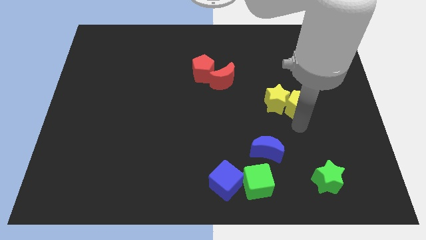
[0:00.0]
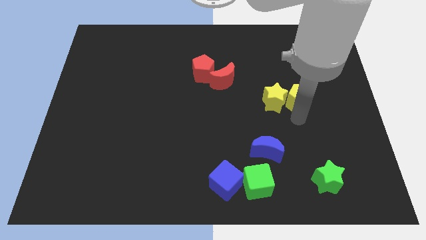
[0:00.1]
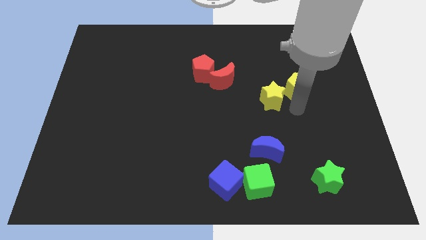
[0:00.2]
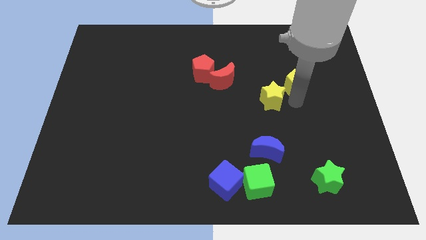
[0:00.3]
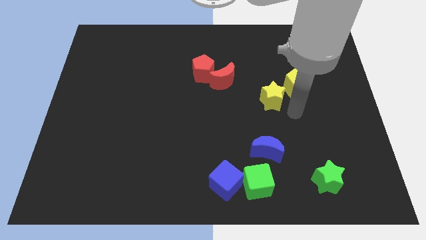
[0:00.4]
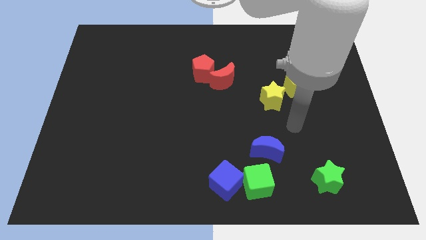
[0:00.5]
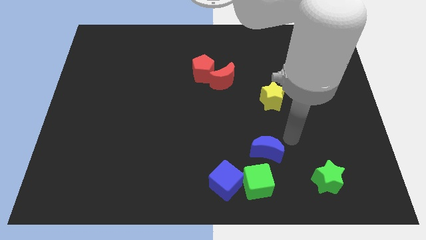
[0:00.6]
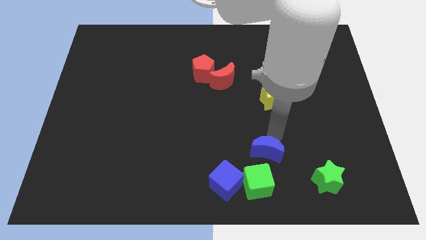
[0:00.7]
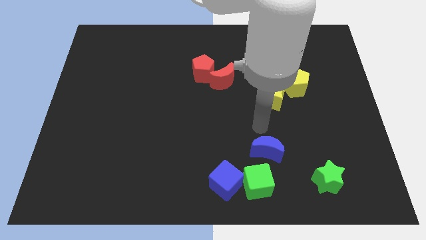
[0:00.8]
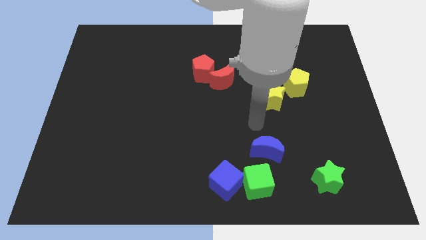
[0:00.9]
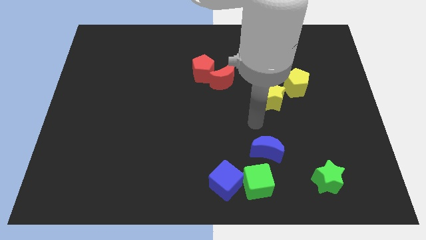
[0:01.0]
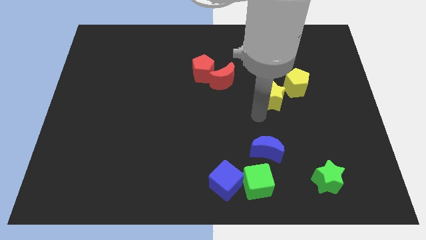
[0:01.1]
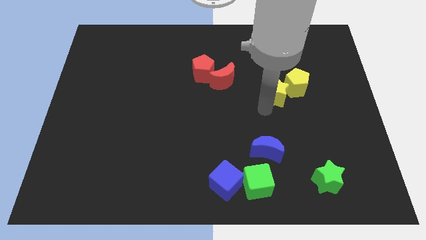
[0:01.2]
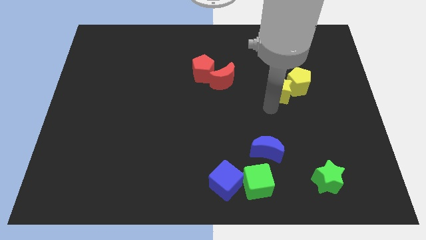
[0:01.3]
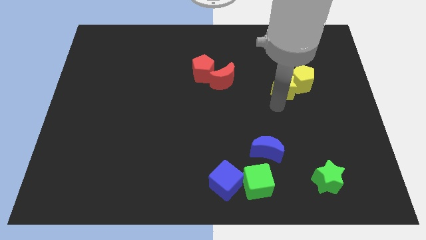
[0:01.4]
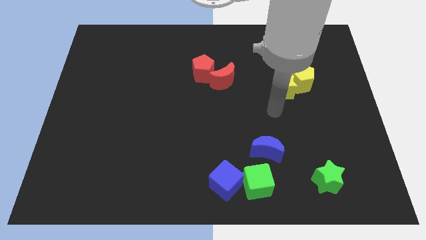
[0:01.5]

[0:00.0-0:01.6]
push the yellow star into the yellow pentagon

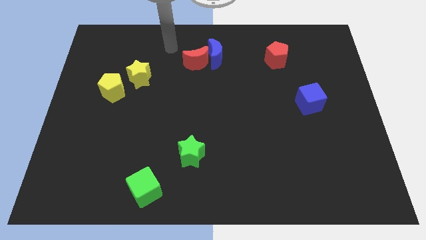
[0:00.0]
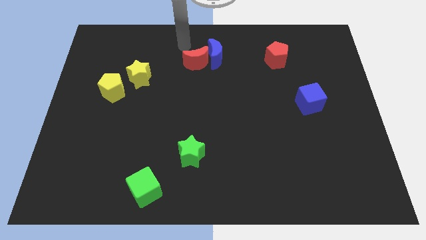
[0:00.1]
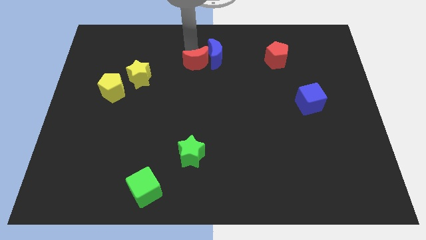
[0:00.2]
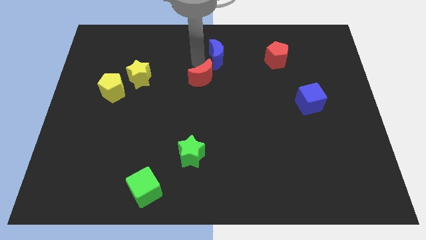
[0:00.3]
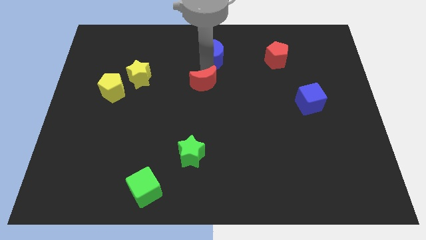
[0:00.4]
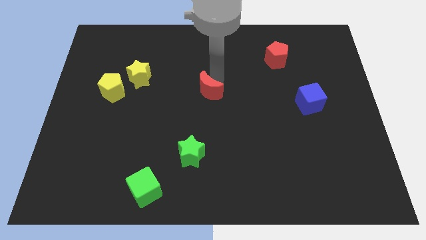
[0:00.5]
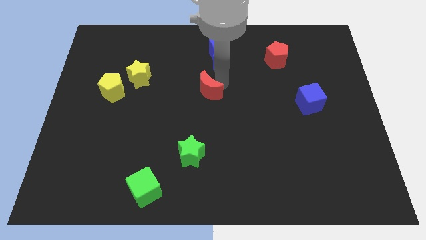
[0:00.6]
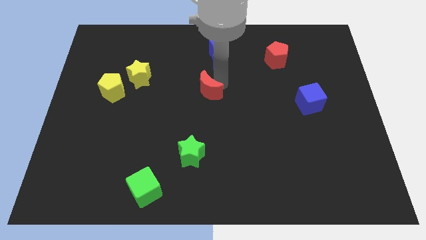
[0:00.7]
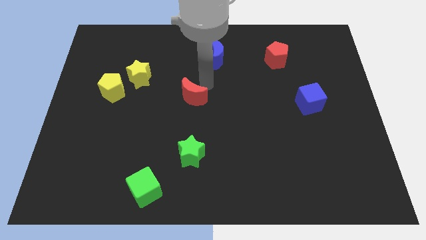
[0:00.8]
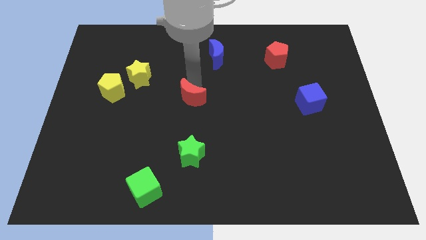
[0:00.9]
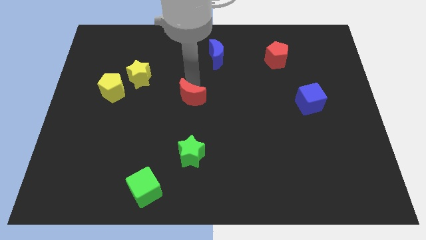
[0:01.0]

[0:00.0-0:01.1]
push the red crescent slightly to the bottom

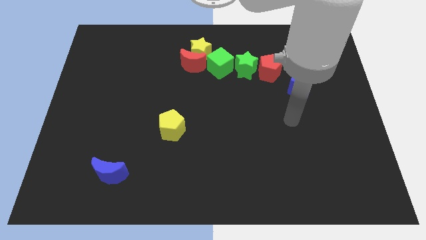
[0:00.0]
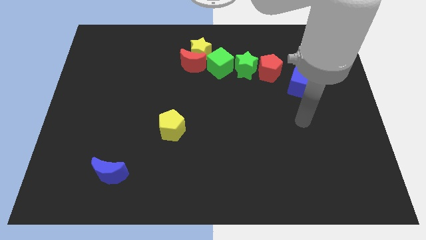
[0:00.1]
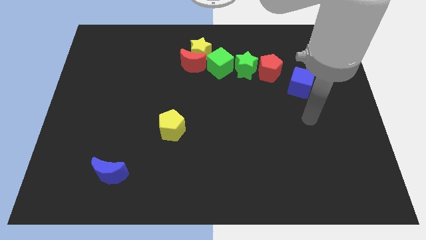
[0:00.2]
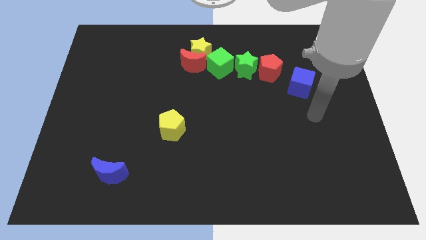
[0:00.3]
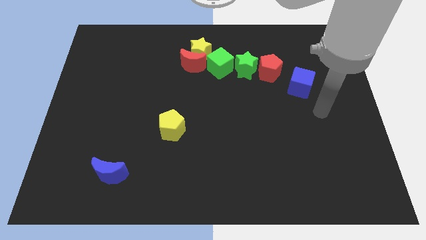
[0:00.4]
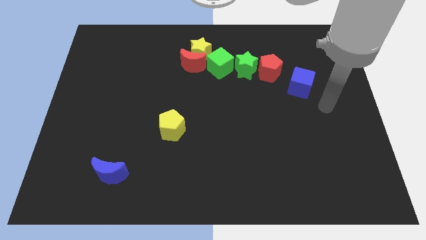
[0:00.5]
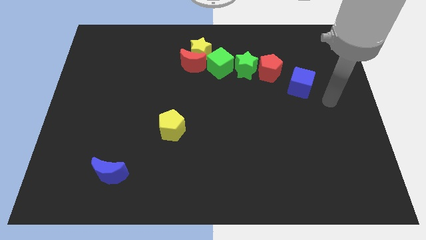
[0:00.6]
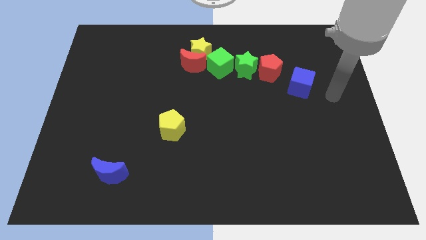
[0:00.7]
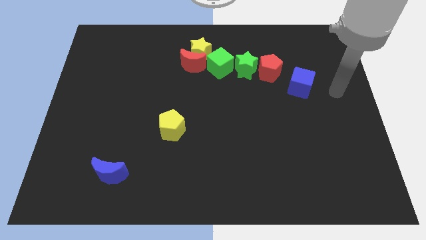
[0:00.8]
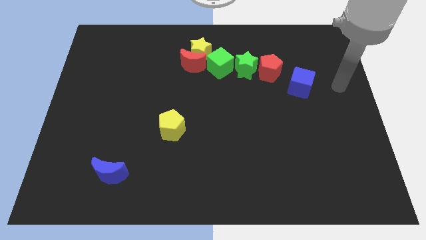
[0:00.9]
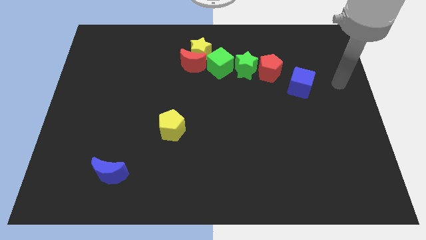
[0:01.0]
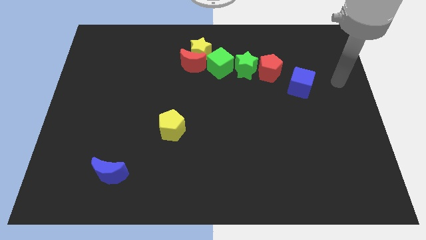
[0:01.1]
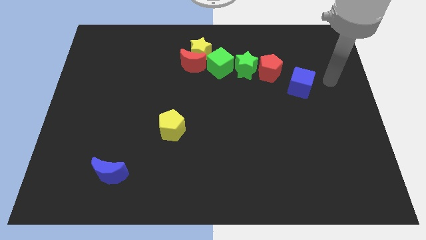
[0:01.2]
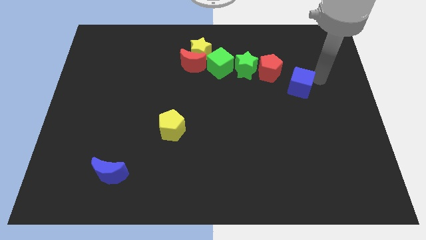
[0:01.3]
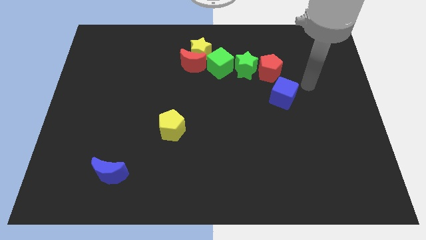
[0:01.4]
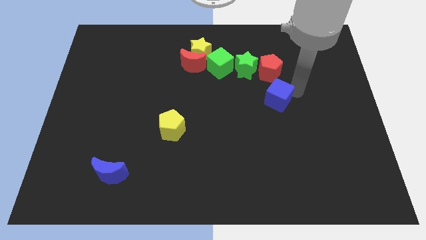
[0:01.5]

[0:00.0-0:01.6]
put the blue cube below the red pentagon

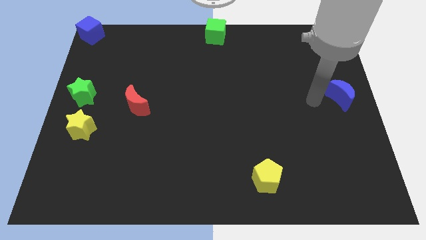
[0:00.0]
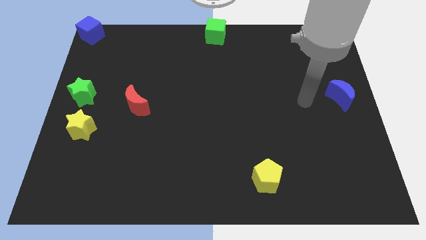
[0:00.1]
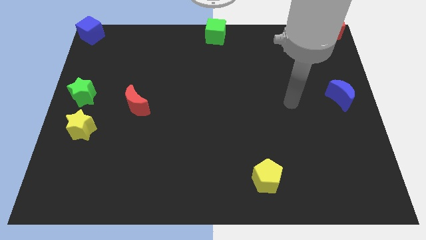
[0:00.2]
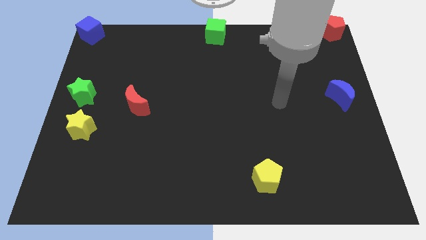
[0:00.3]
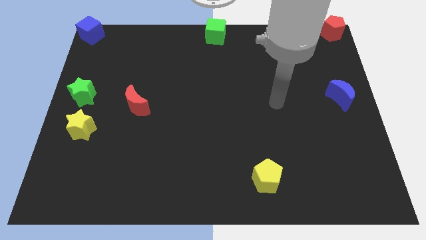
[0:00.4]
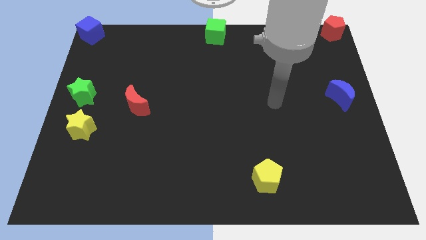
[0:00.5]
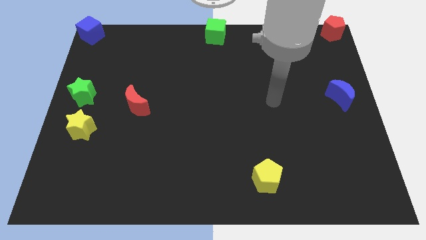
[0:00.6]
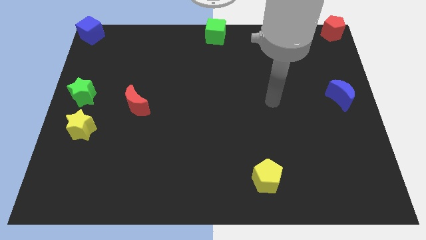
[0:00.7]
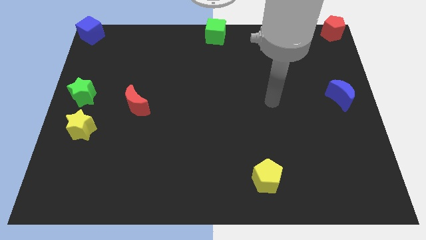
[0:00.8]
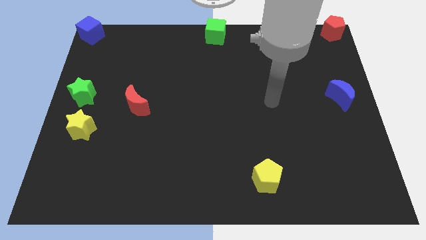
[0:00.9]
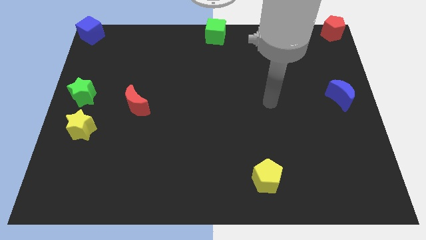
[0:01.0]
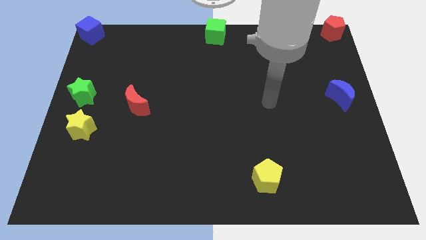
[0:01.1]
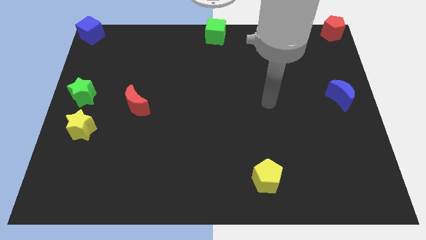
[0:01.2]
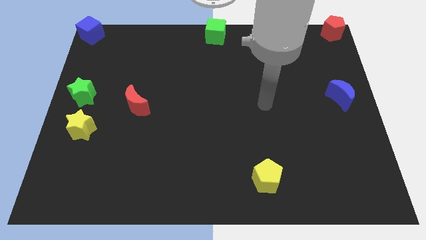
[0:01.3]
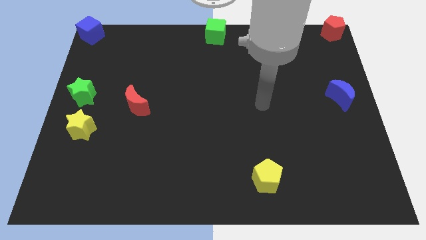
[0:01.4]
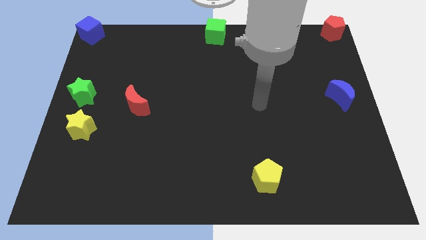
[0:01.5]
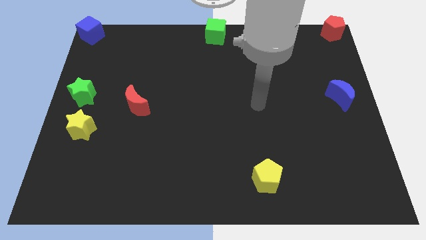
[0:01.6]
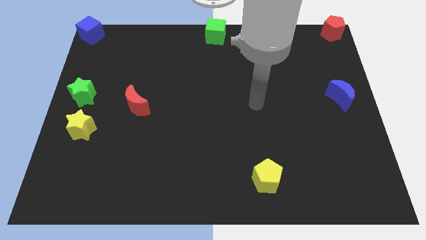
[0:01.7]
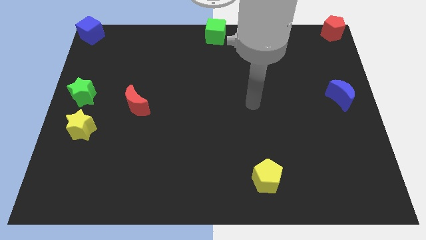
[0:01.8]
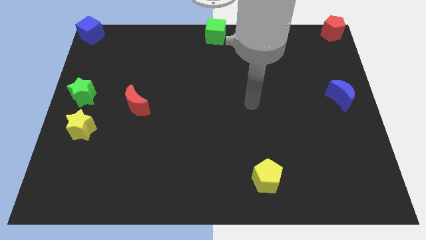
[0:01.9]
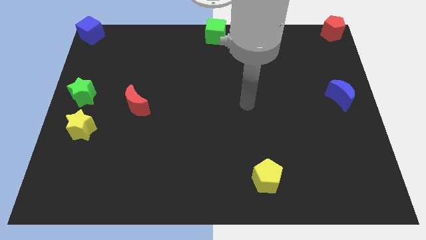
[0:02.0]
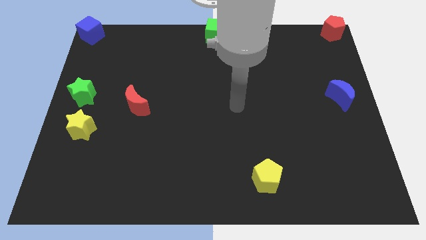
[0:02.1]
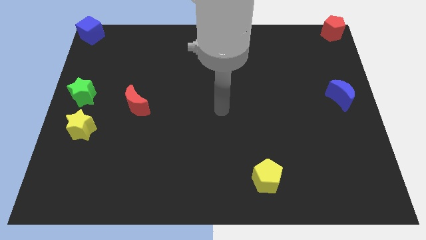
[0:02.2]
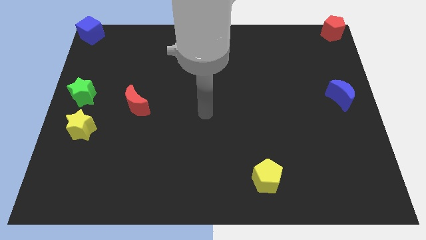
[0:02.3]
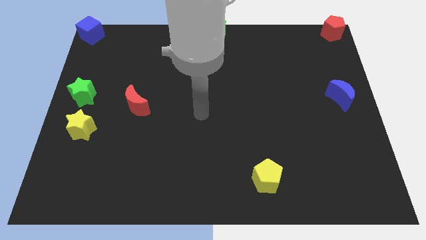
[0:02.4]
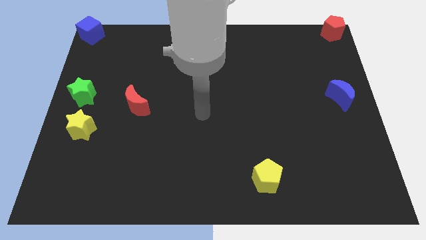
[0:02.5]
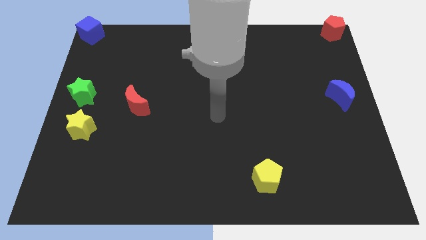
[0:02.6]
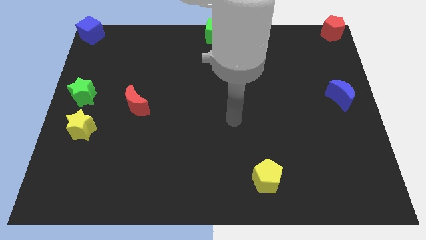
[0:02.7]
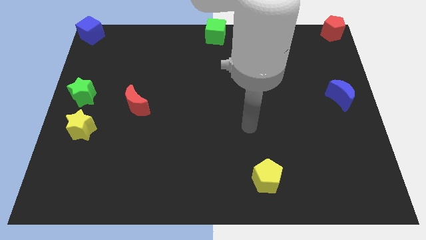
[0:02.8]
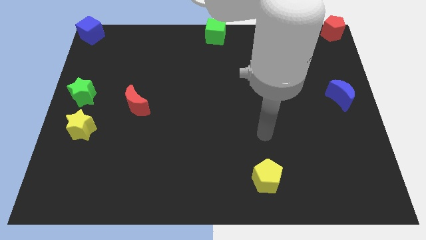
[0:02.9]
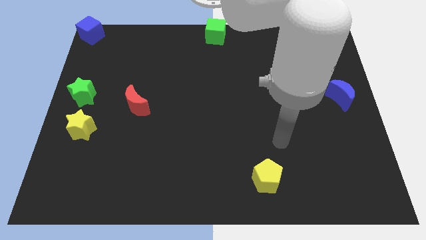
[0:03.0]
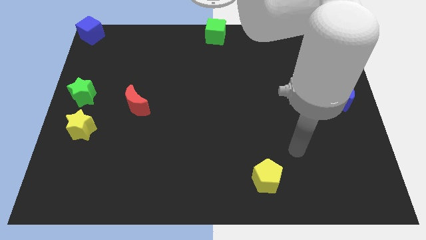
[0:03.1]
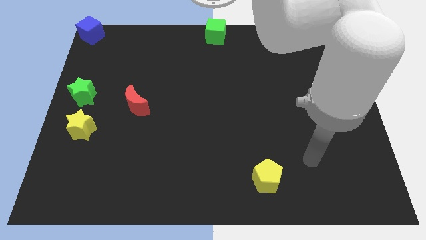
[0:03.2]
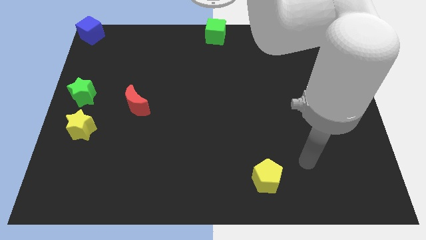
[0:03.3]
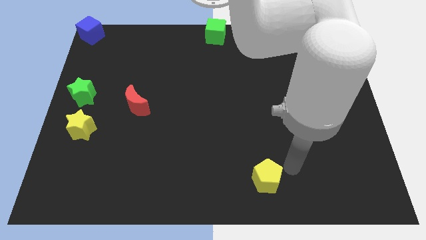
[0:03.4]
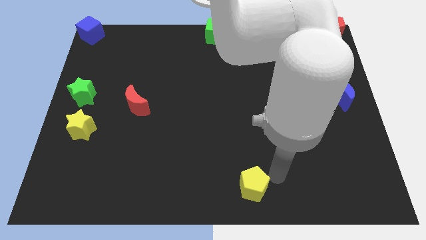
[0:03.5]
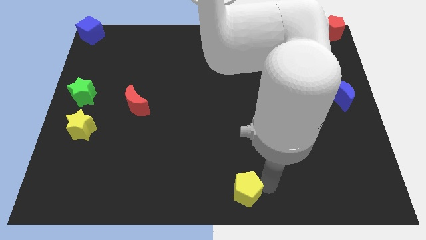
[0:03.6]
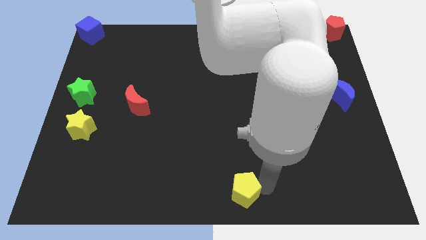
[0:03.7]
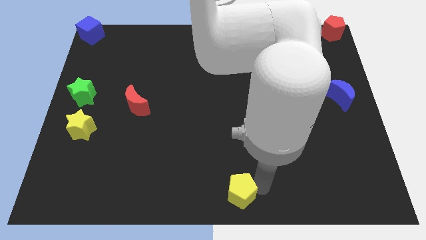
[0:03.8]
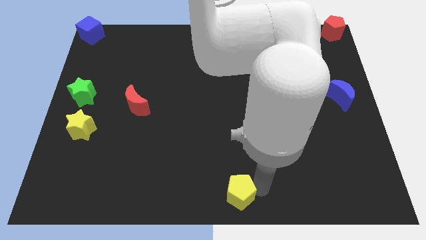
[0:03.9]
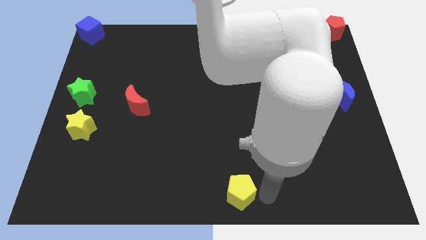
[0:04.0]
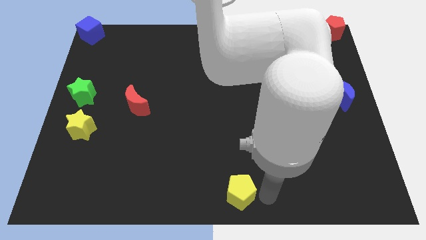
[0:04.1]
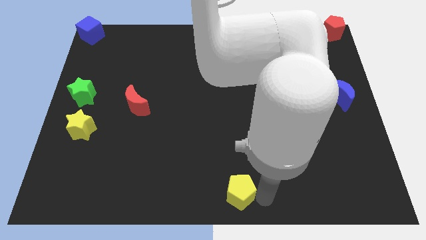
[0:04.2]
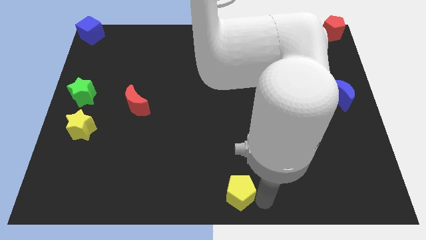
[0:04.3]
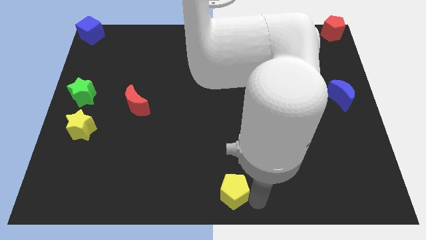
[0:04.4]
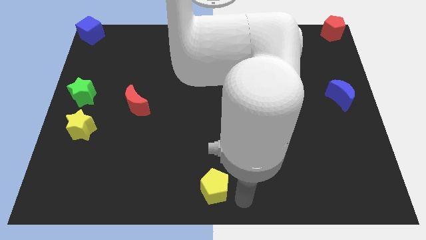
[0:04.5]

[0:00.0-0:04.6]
push the yellow pentagon to the bottom center

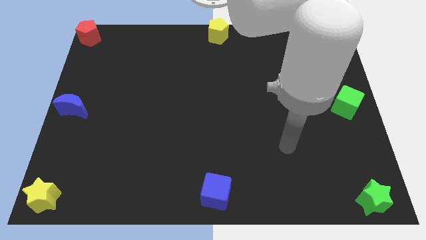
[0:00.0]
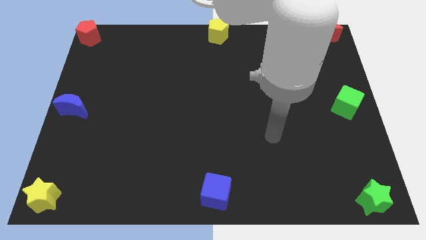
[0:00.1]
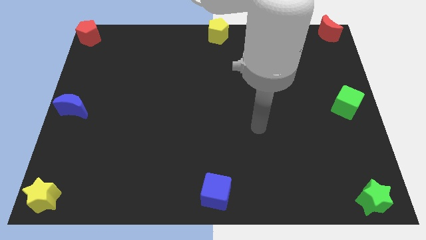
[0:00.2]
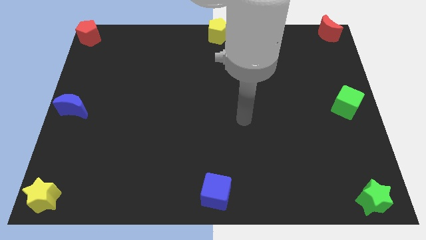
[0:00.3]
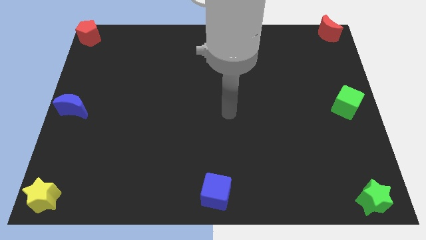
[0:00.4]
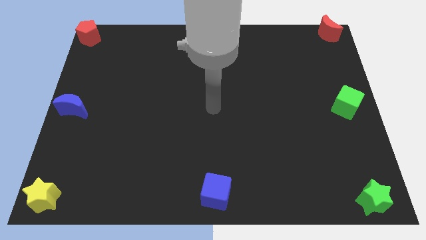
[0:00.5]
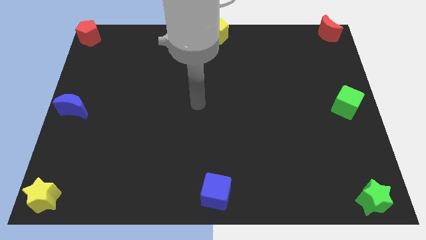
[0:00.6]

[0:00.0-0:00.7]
move your arm towards the center of the board
